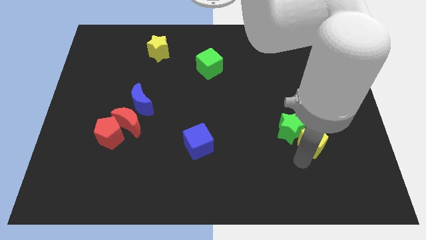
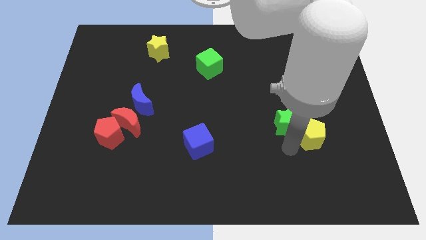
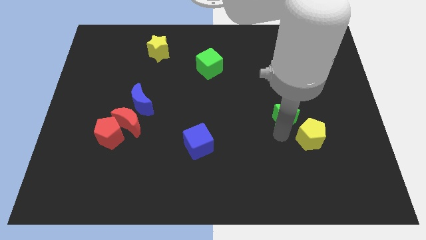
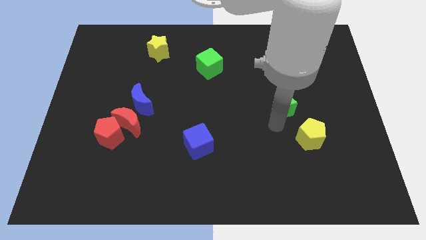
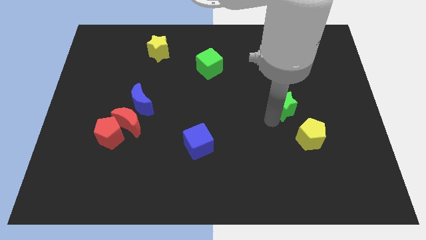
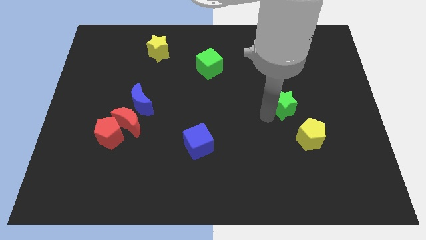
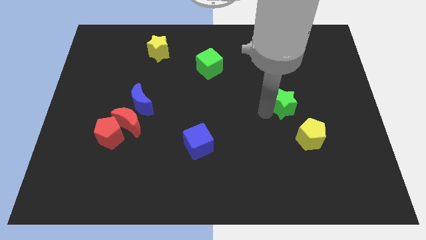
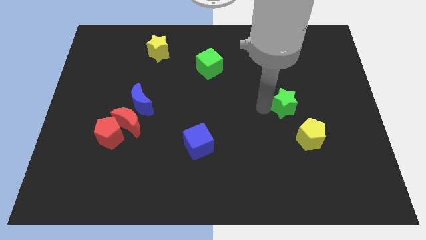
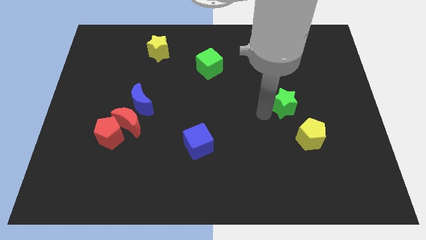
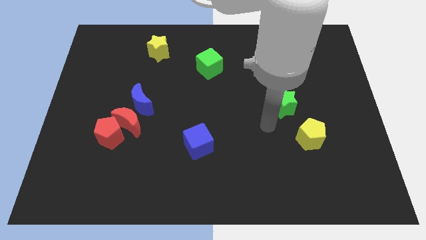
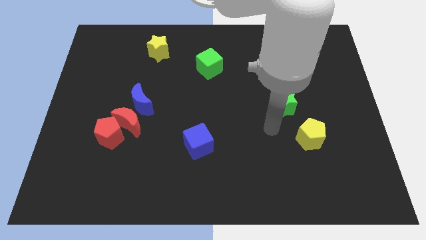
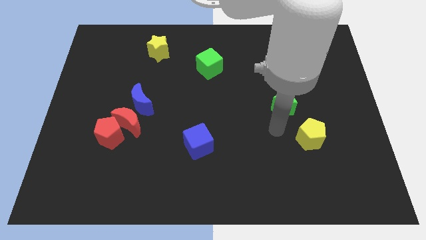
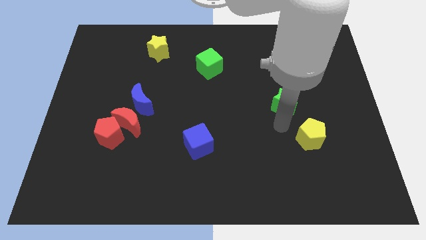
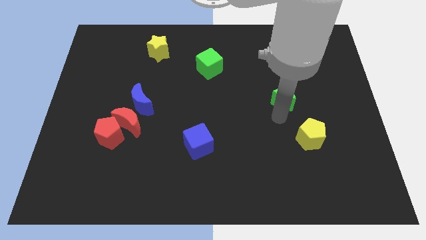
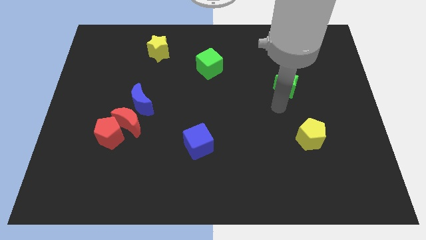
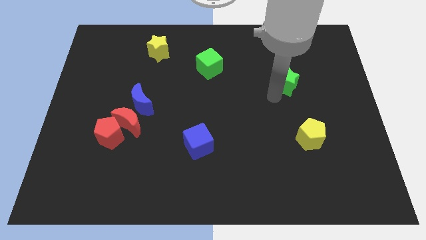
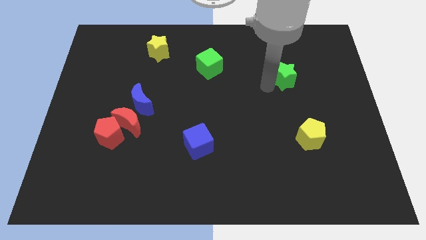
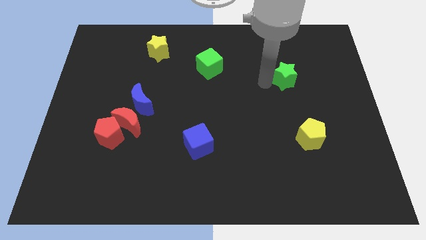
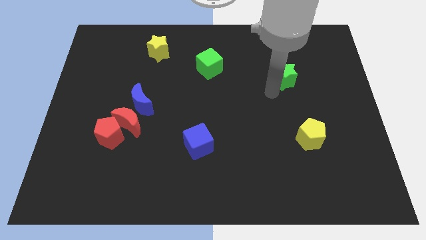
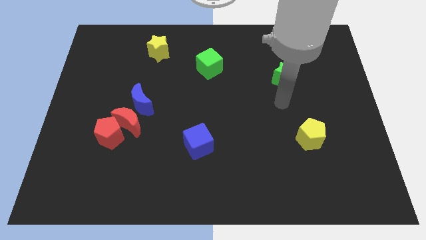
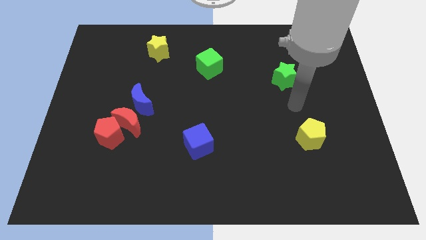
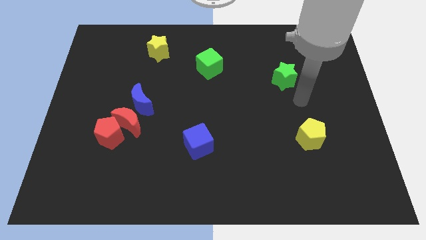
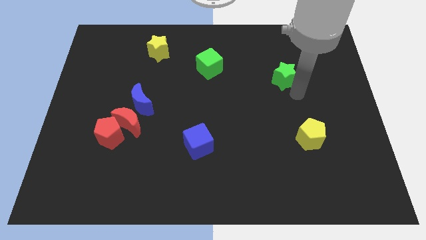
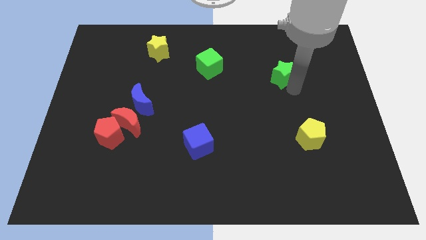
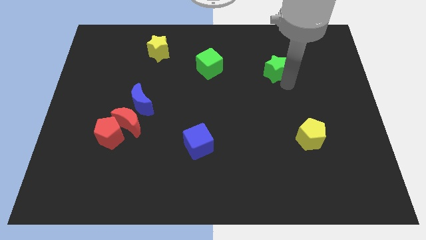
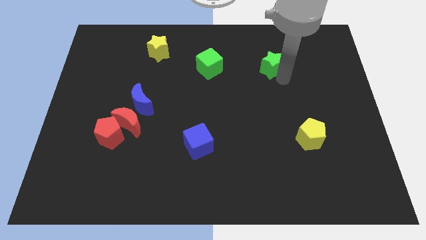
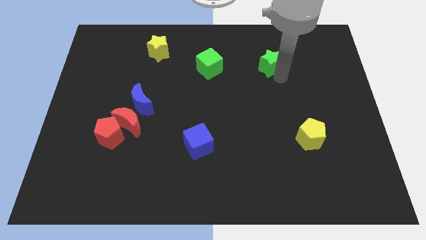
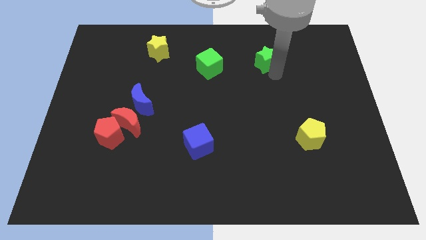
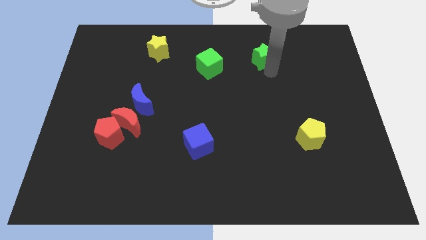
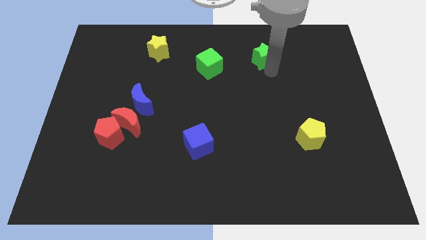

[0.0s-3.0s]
place green star to the right of green cube

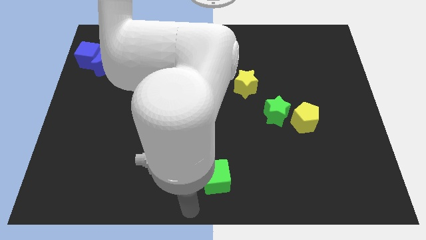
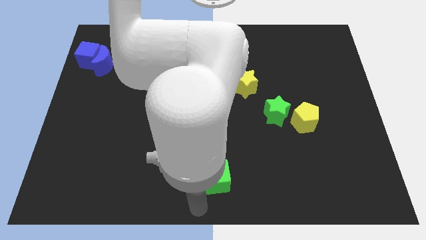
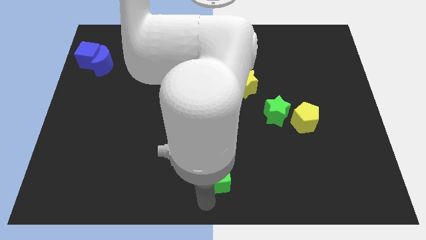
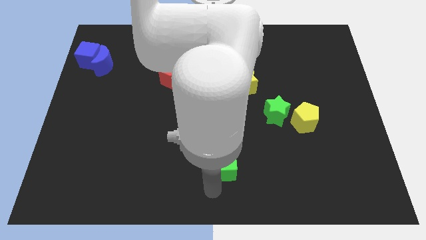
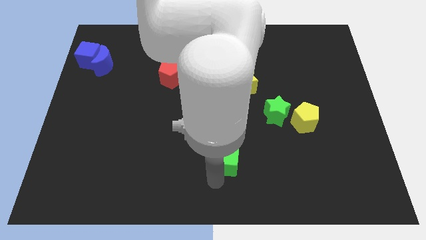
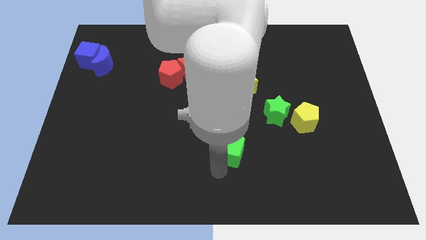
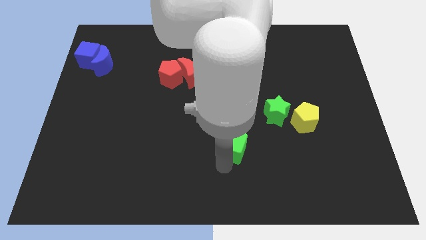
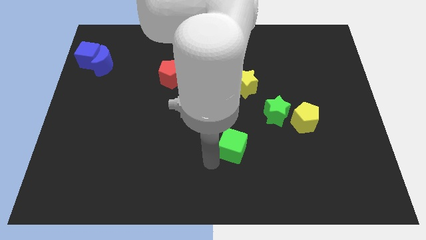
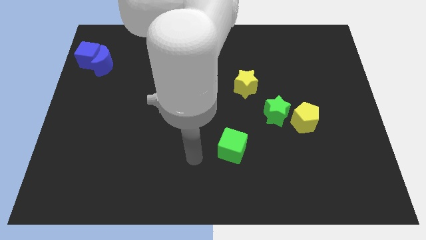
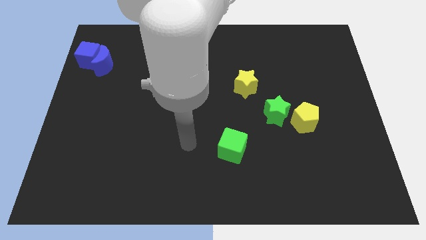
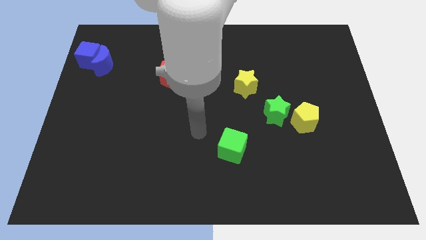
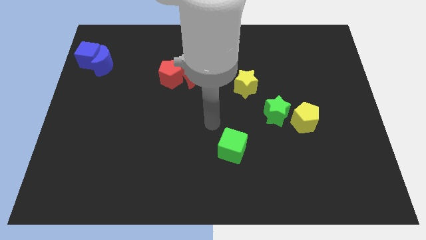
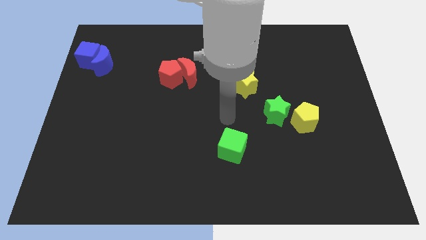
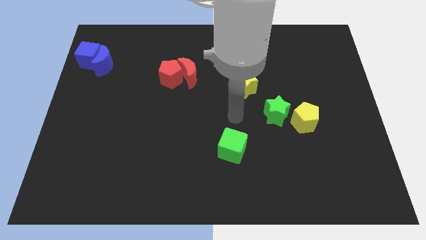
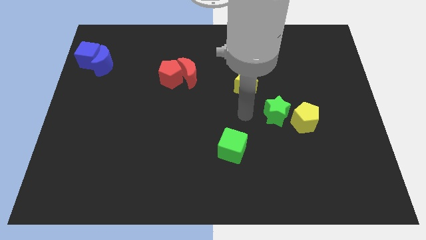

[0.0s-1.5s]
drag the green cube diagonally on the bottom left side of the green star

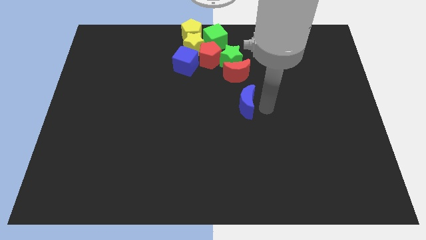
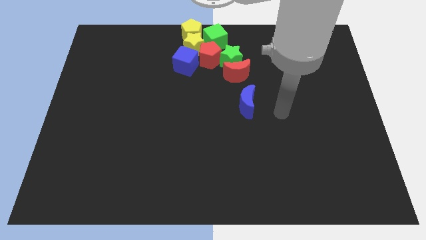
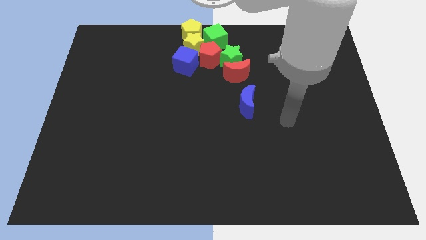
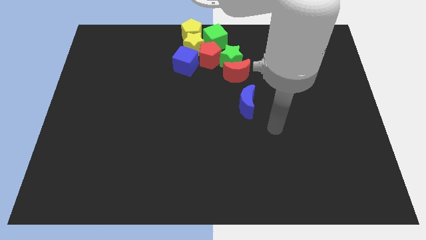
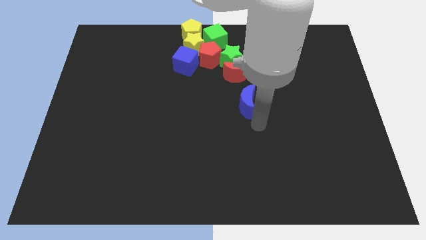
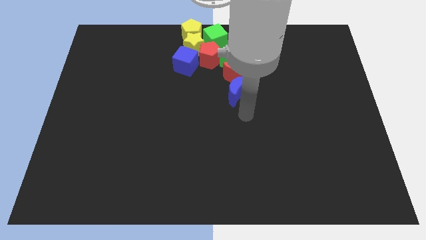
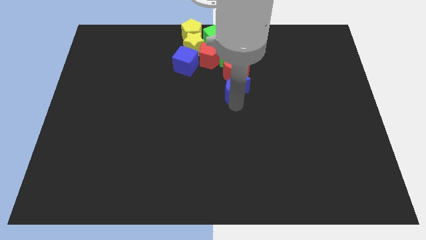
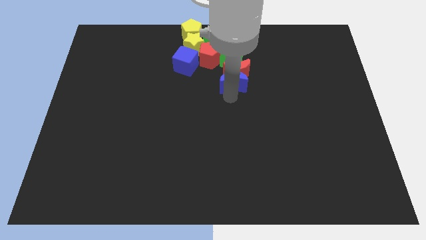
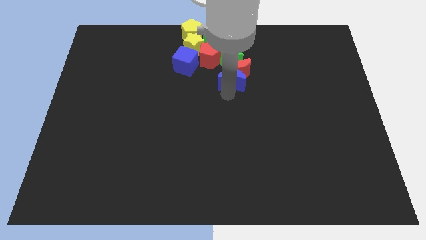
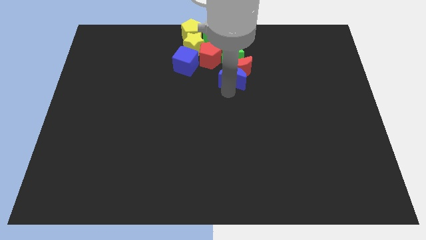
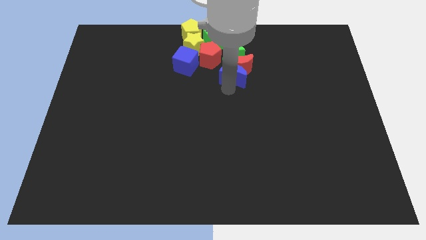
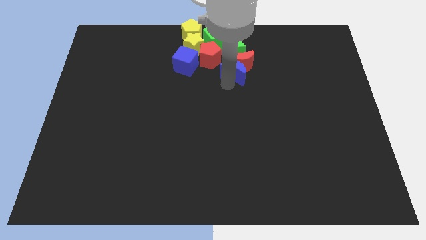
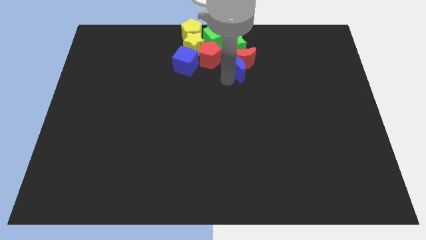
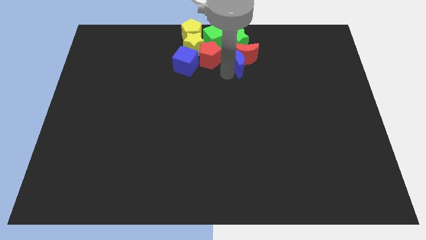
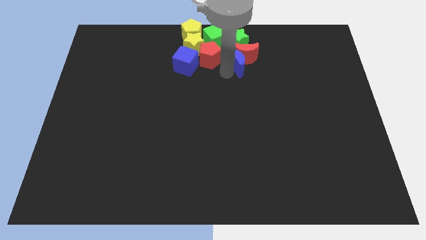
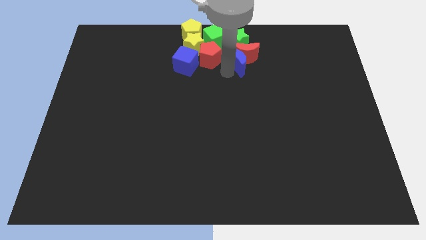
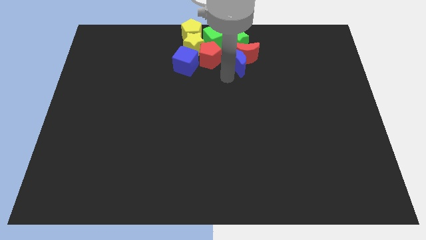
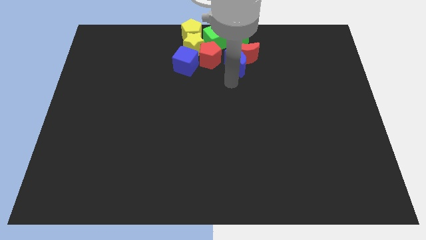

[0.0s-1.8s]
move the blue crescent into the bottom side of the red crescent

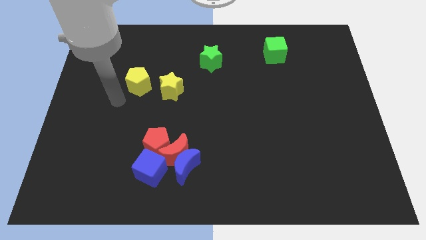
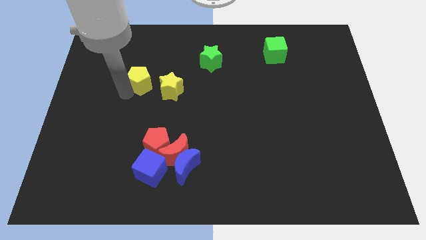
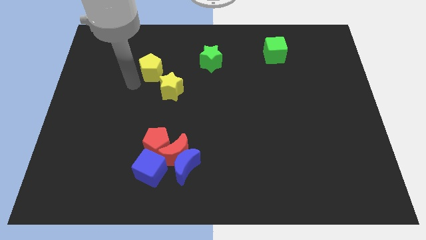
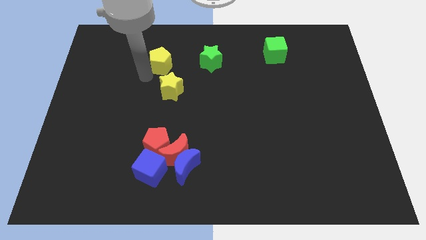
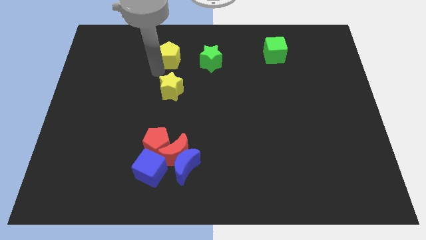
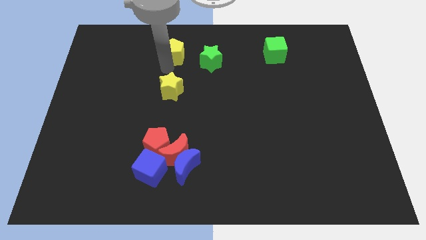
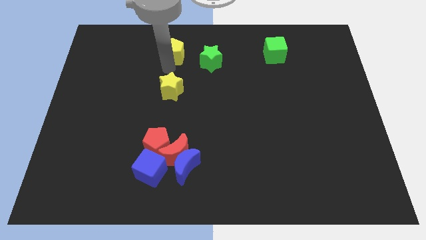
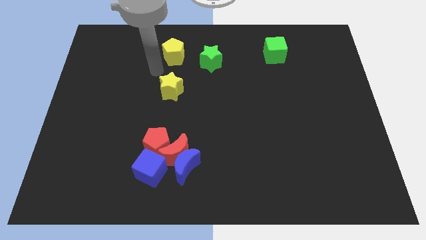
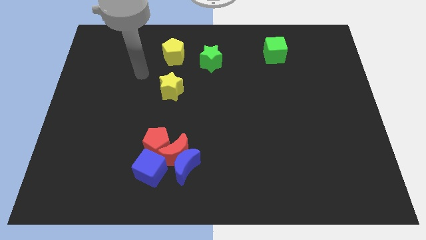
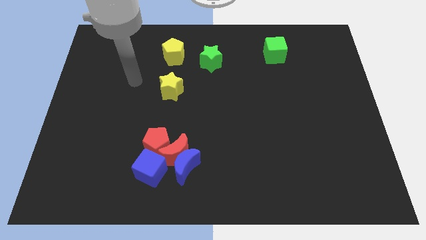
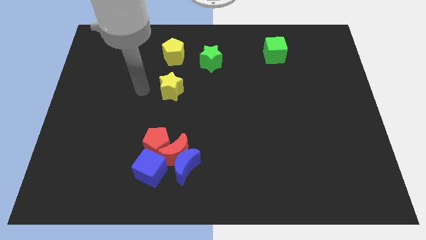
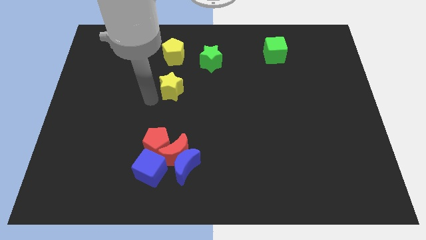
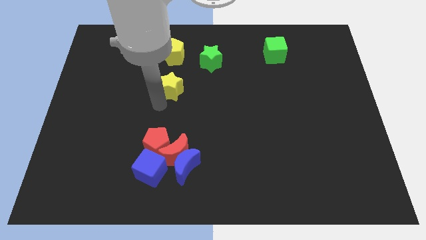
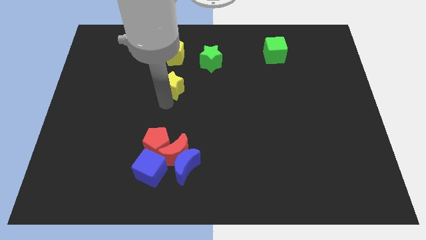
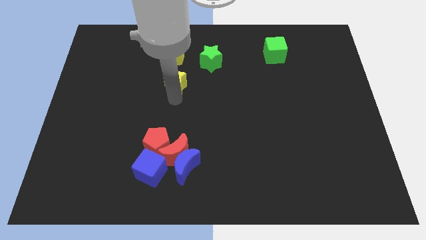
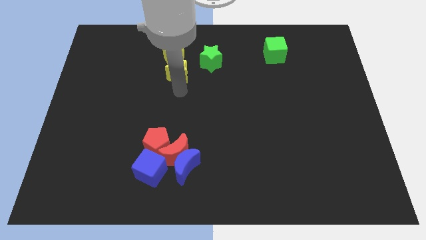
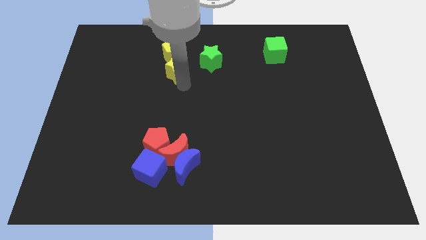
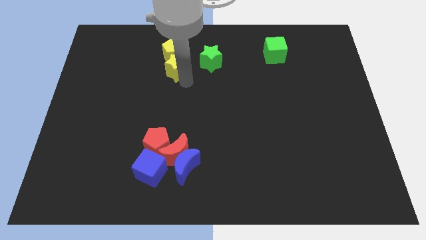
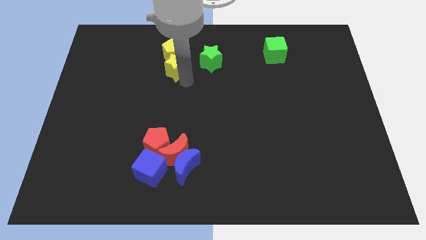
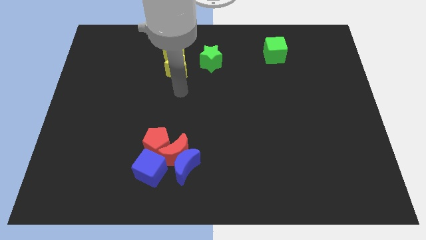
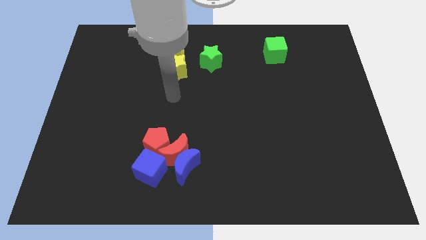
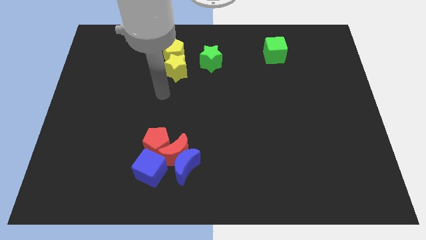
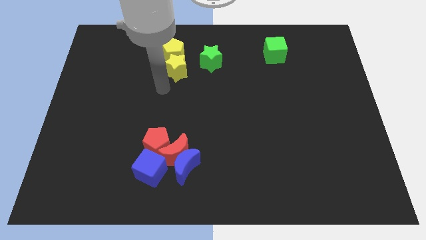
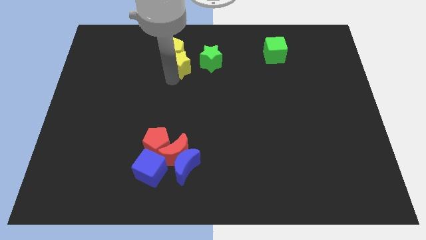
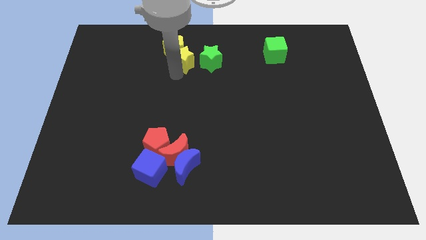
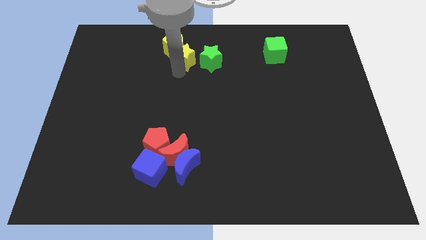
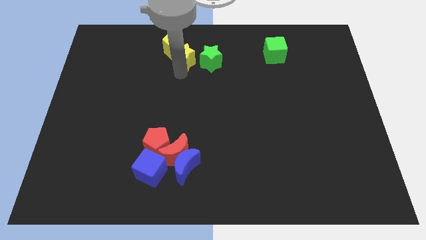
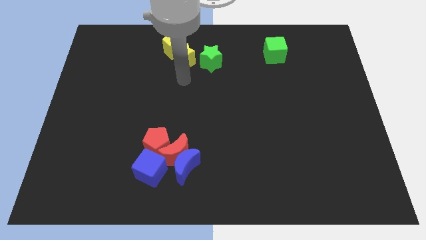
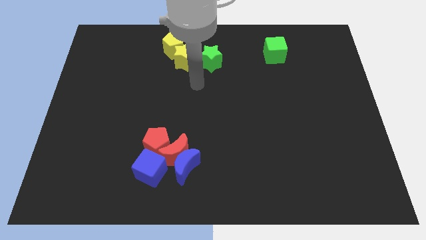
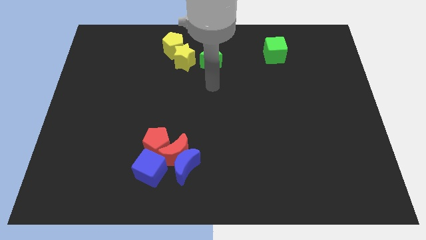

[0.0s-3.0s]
slide the yellow star diagonally into the yellow pentagon
